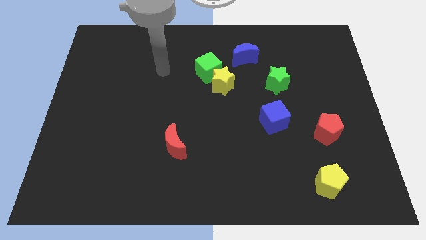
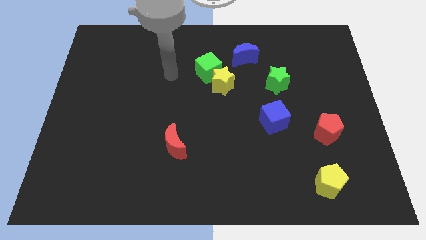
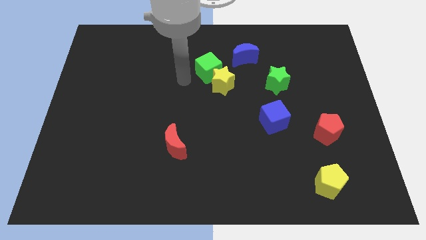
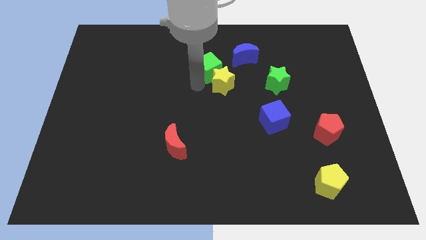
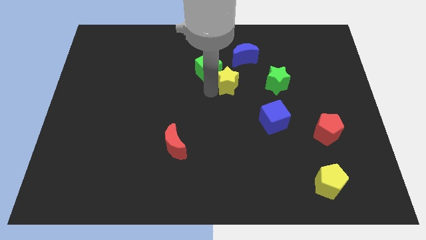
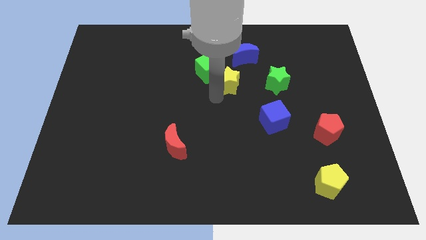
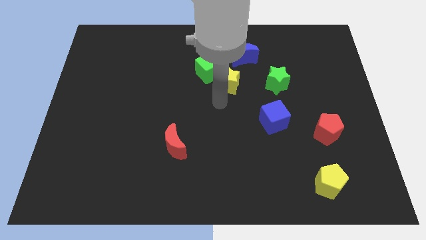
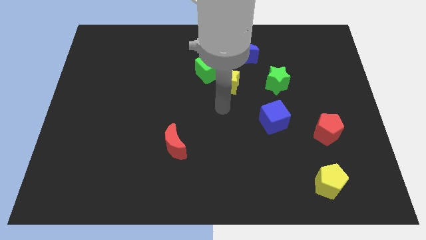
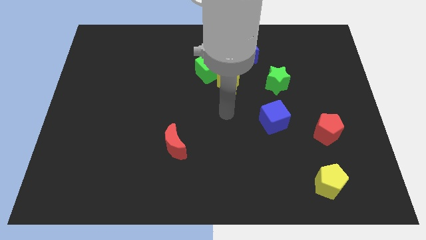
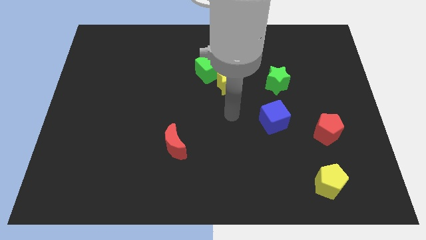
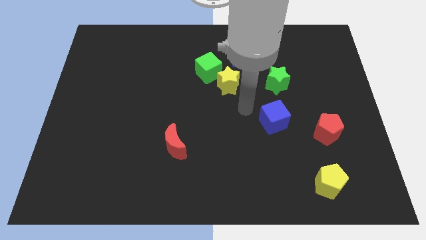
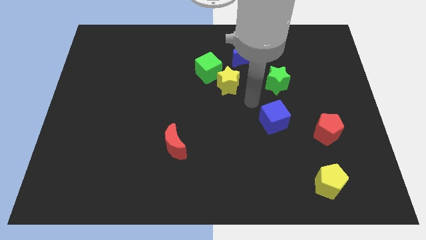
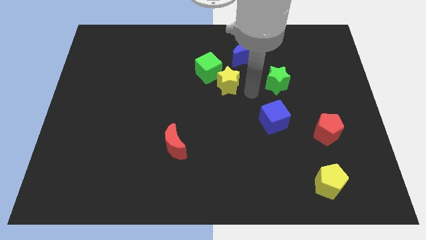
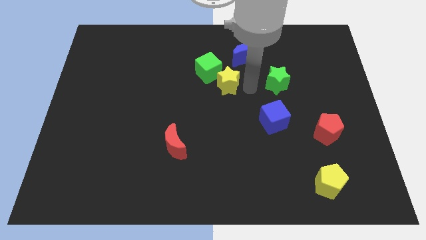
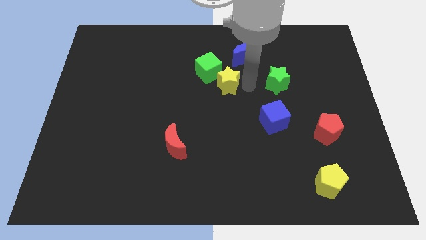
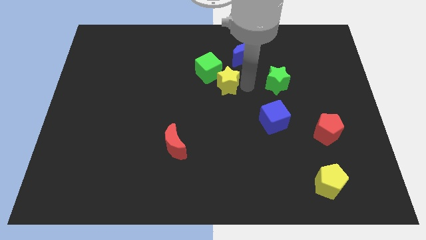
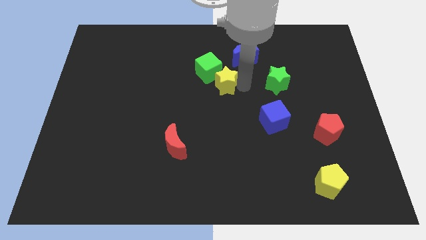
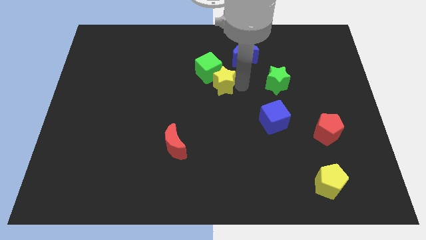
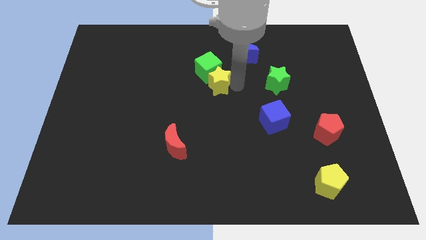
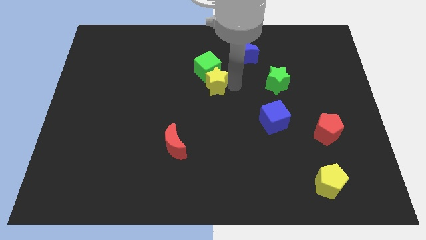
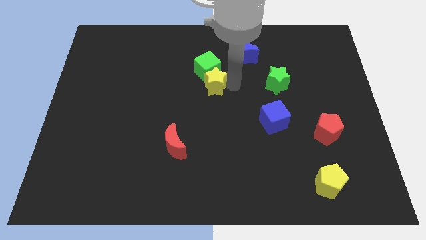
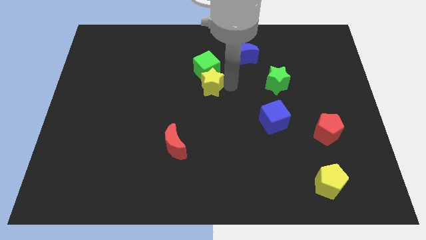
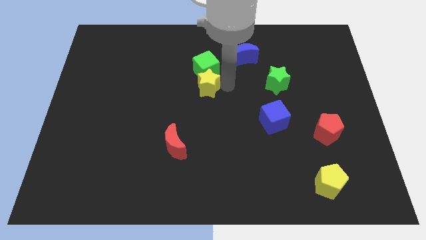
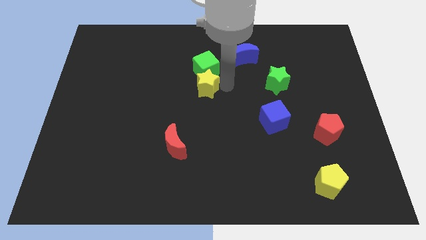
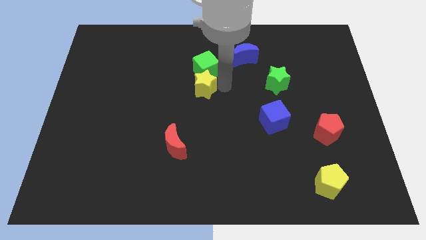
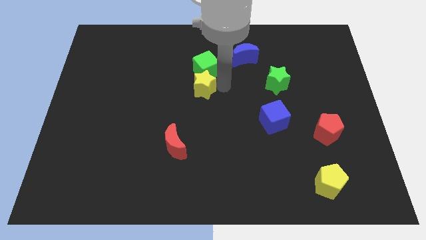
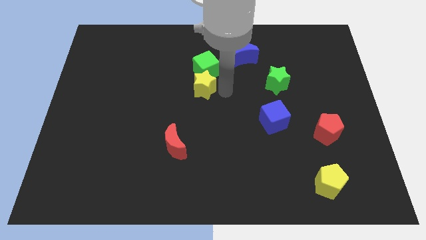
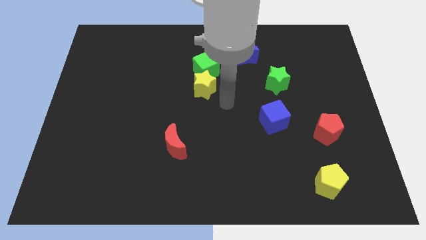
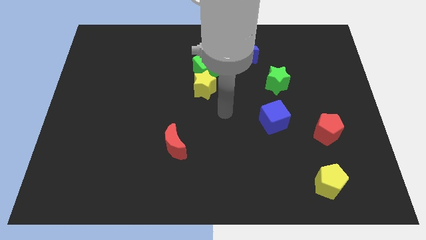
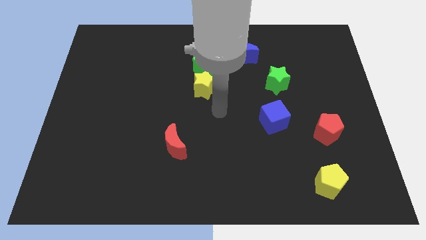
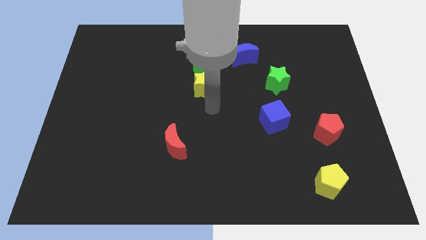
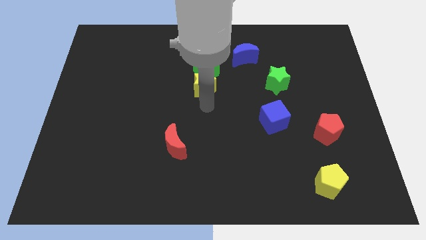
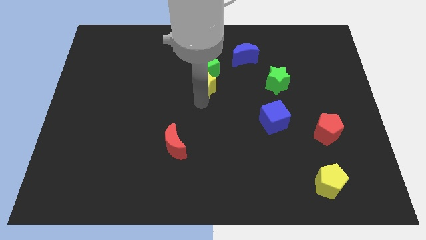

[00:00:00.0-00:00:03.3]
push the yellow star towards the center of the board

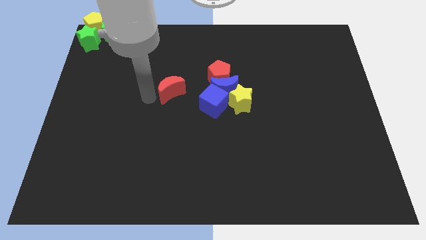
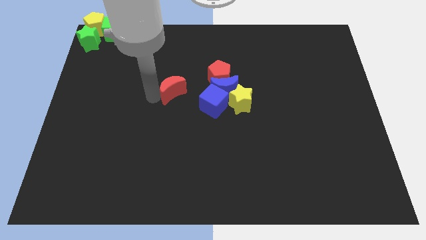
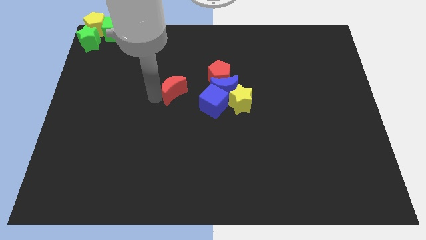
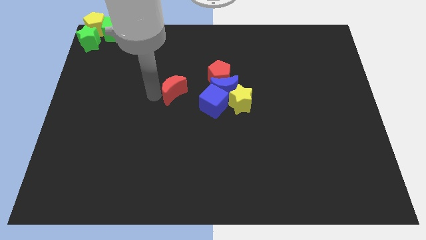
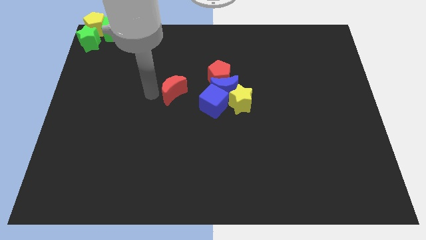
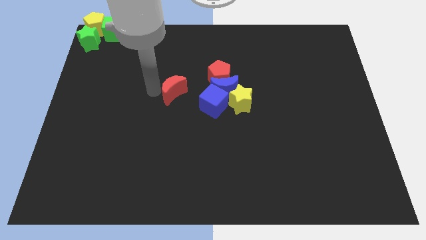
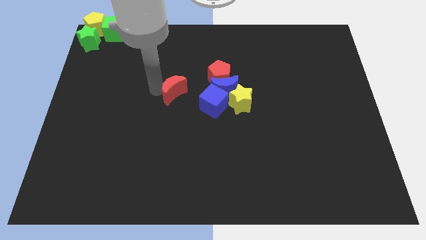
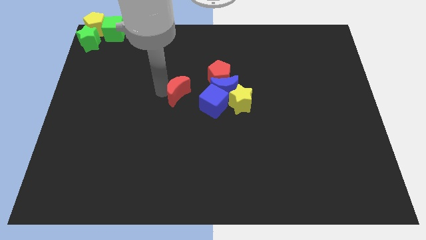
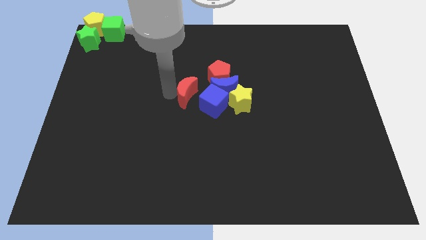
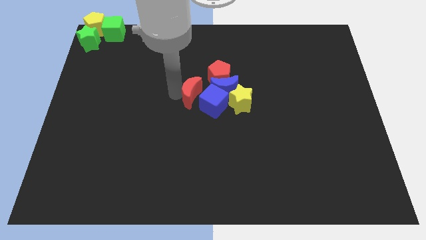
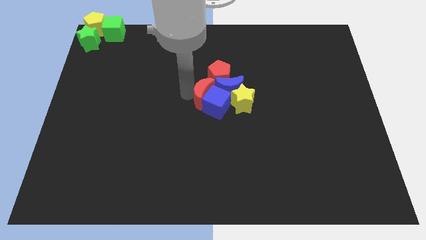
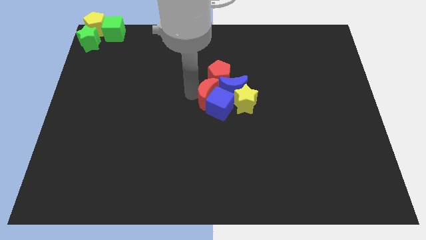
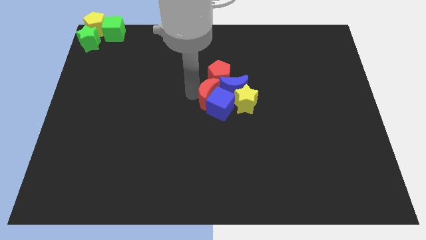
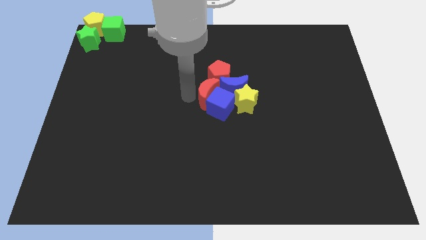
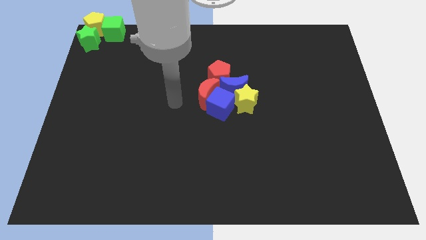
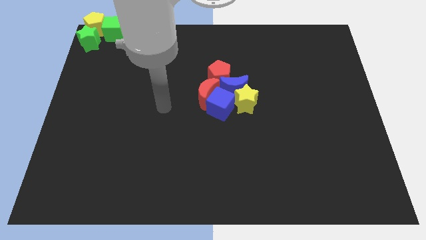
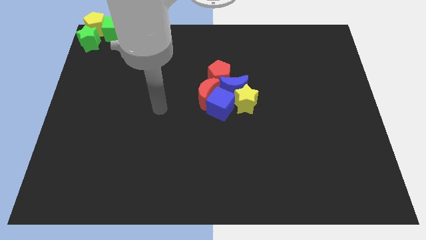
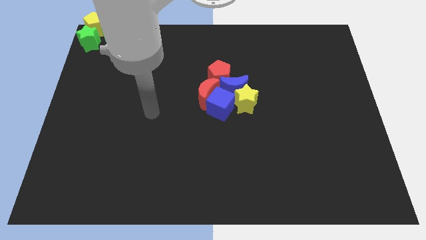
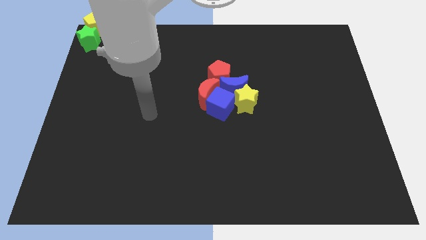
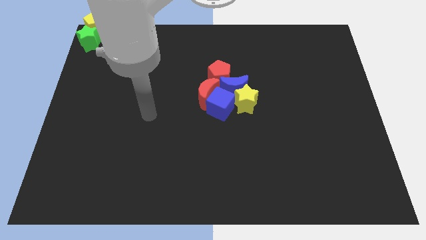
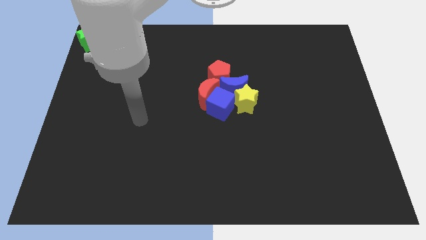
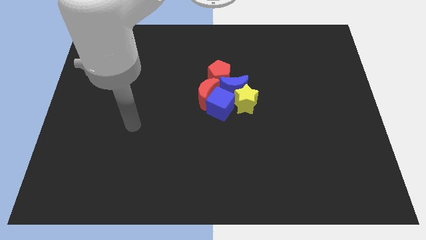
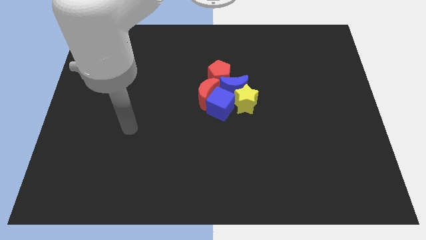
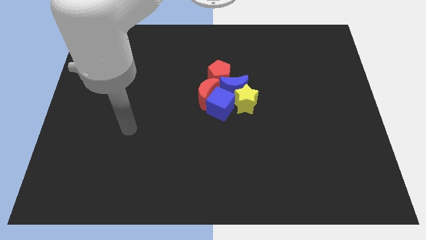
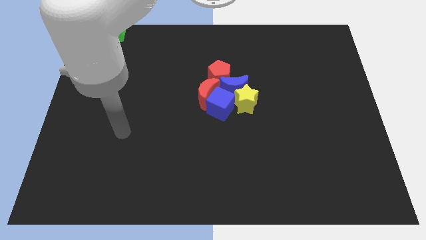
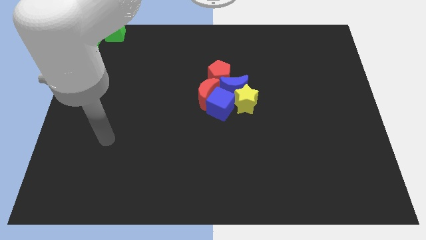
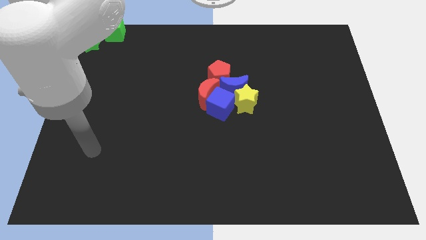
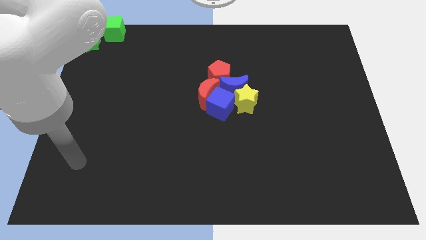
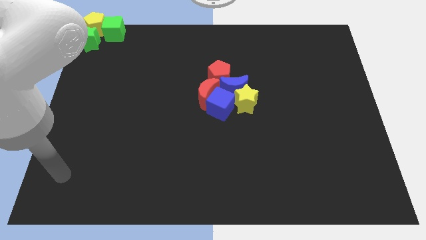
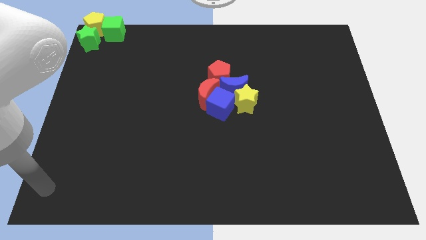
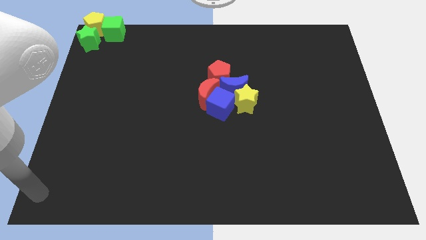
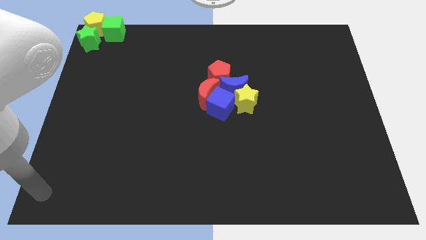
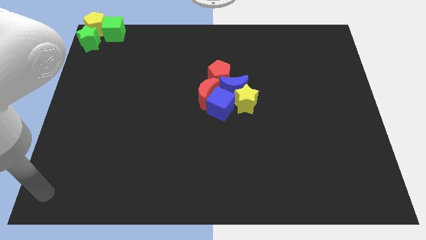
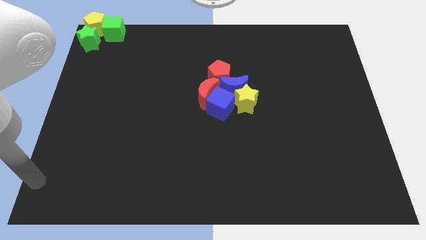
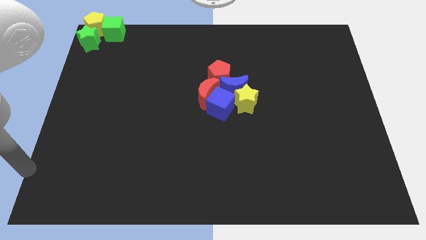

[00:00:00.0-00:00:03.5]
slightly push the red moon into group of blocks

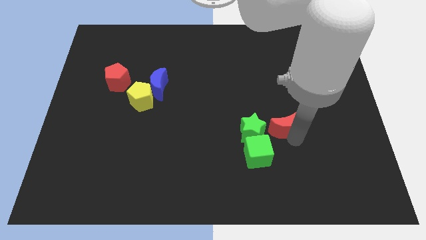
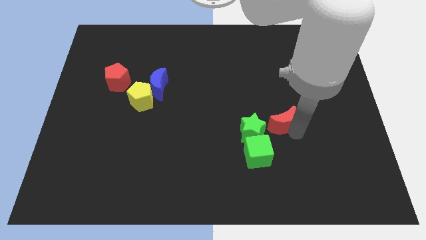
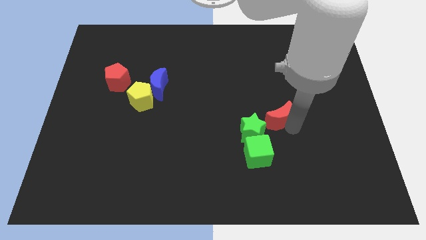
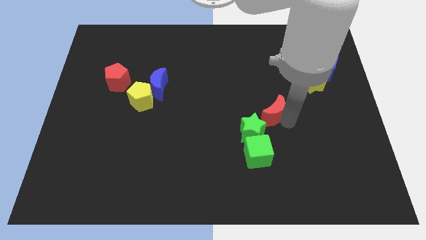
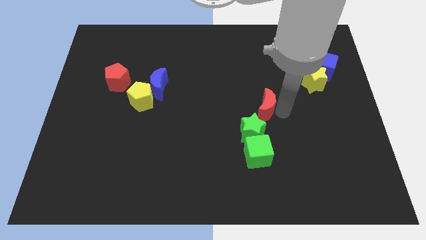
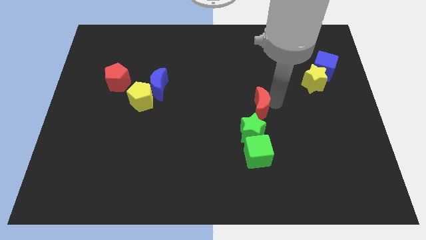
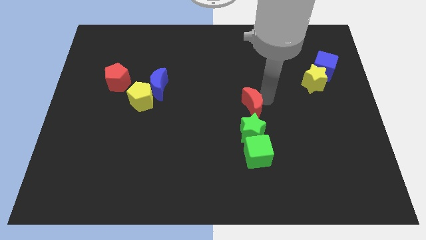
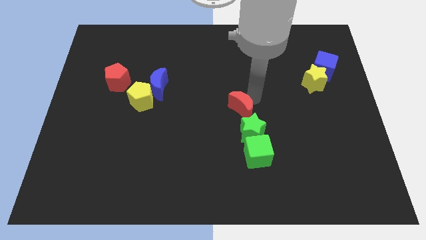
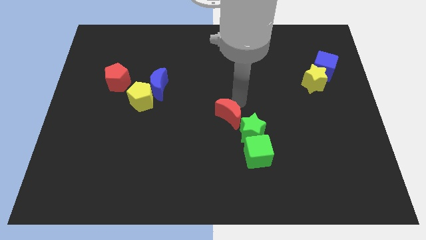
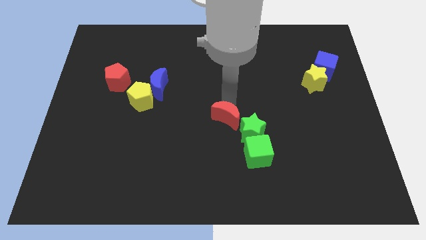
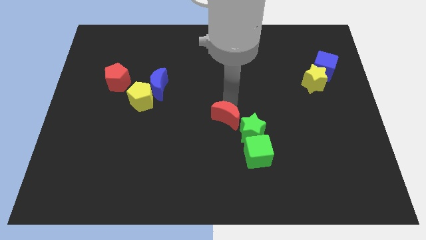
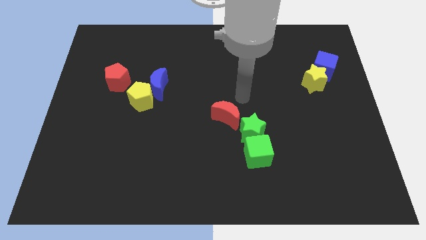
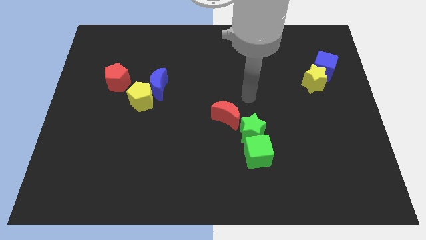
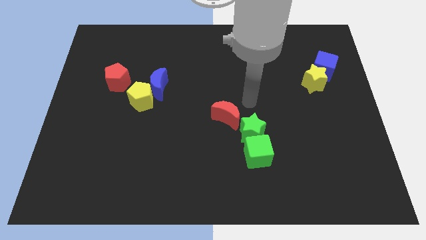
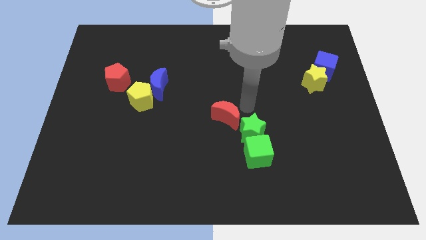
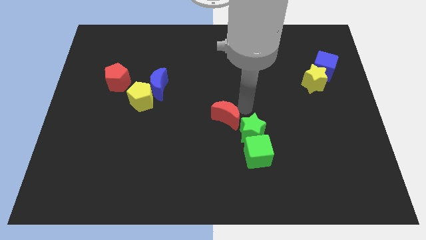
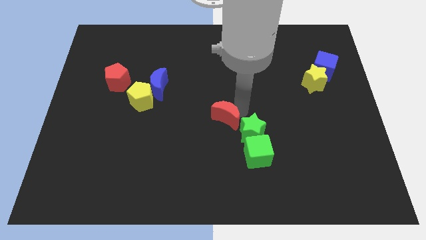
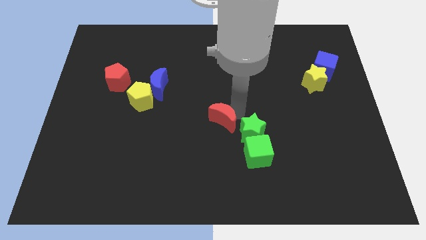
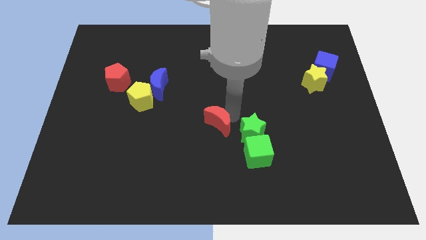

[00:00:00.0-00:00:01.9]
place the red moon to the left of the green star

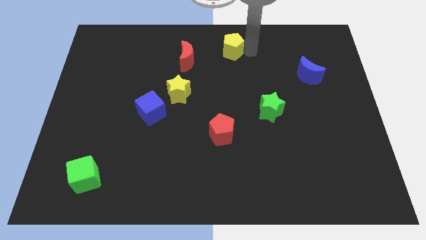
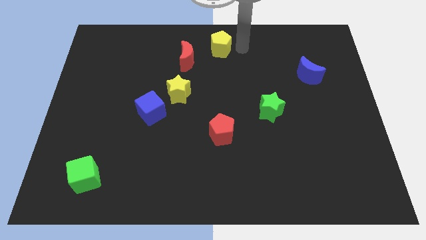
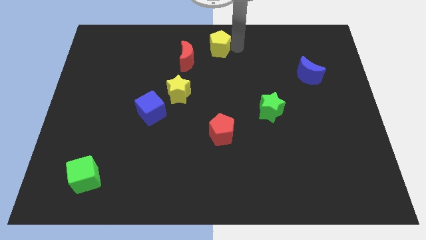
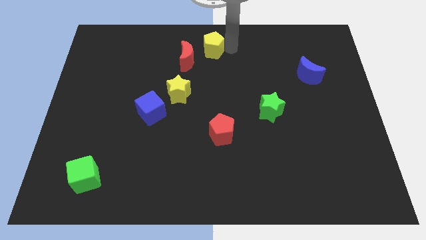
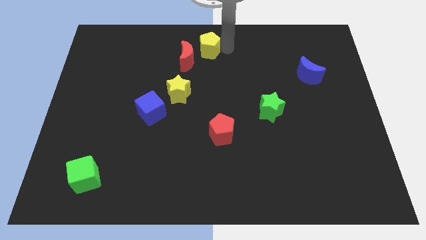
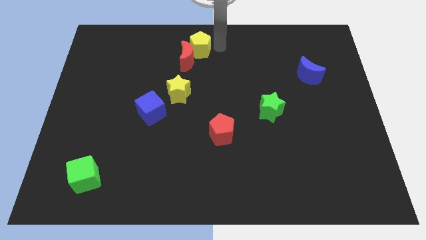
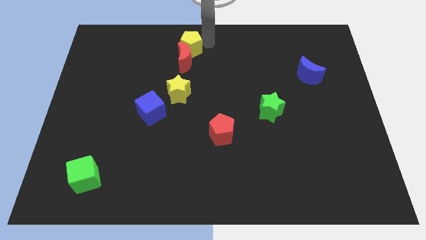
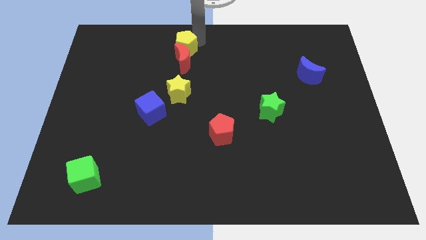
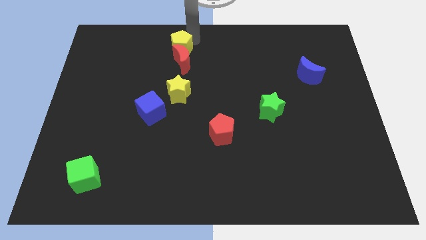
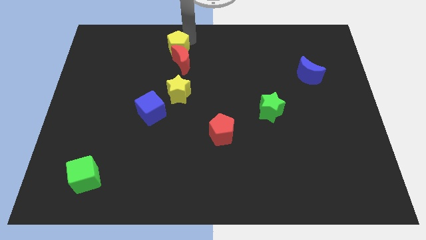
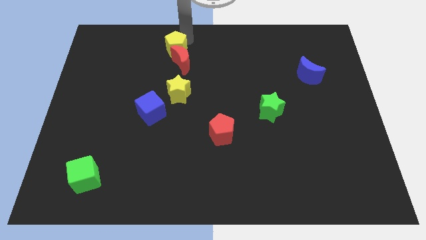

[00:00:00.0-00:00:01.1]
move yellow pentagon above red moon
